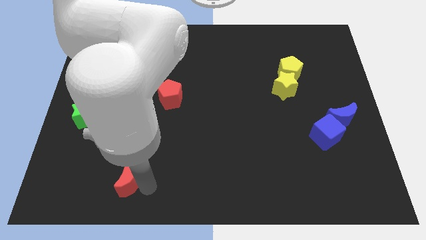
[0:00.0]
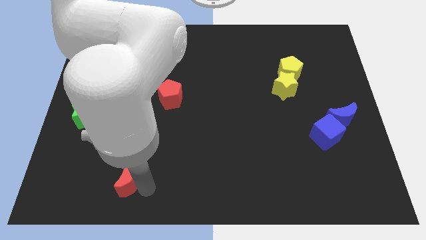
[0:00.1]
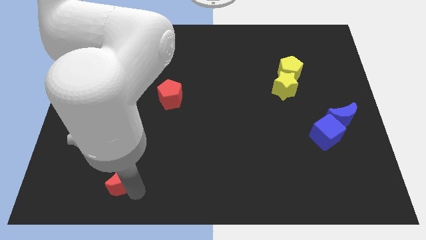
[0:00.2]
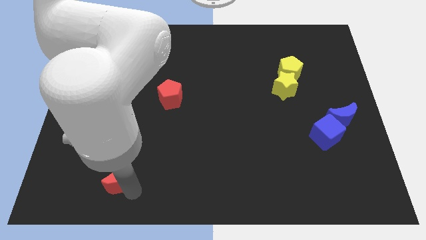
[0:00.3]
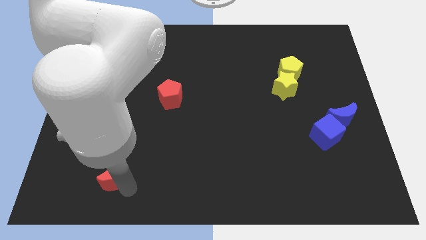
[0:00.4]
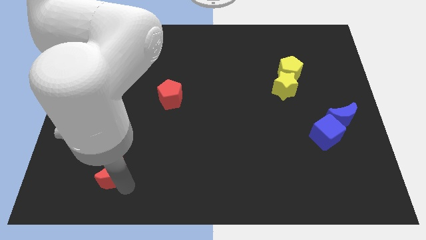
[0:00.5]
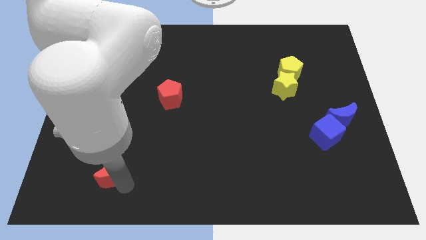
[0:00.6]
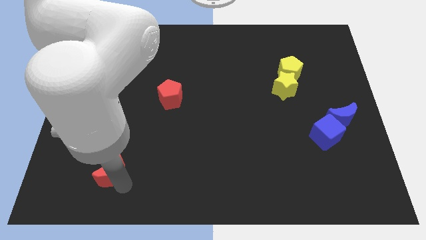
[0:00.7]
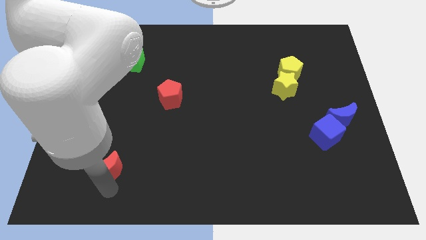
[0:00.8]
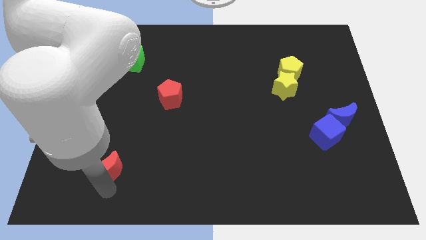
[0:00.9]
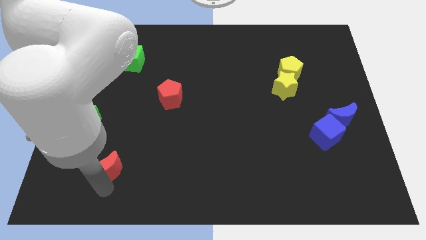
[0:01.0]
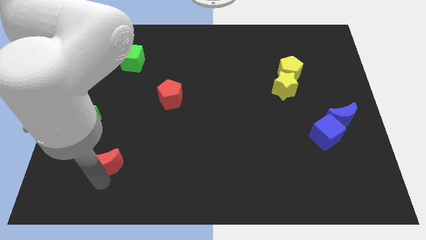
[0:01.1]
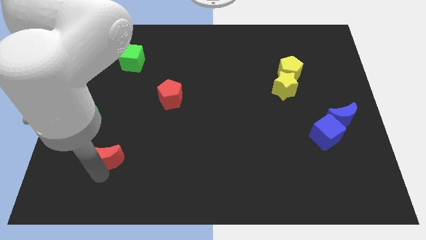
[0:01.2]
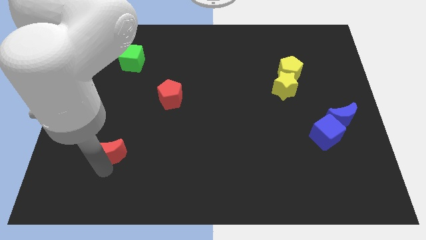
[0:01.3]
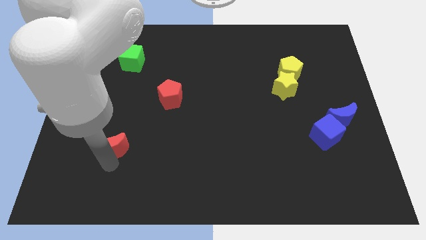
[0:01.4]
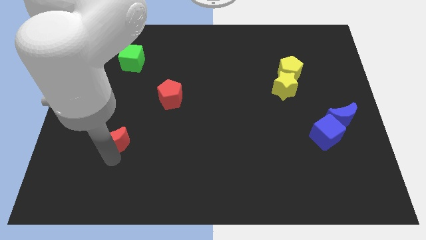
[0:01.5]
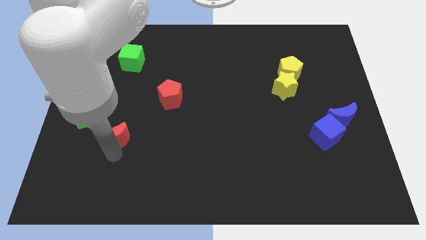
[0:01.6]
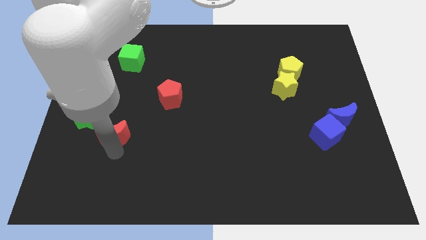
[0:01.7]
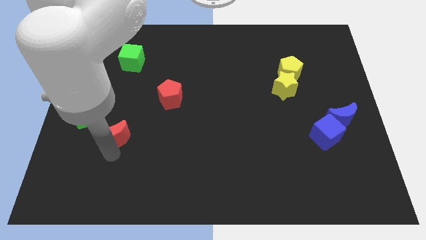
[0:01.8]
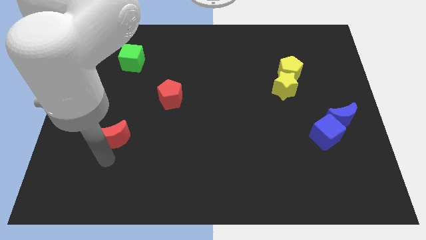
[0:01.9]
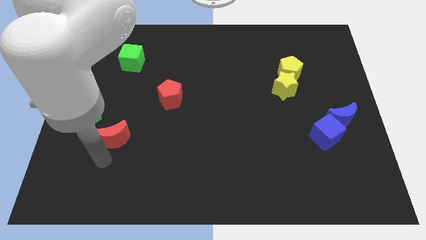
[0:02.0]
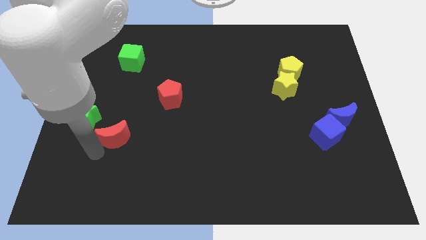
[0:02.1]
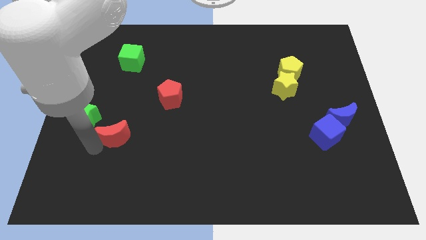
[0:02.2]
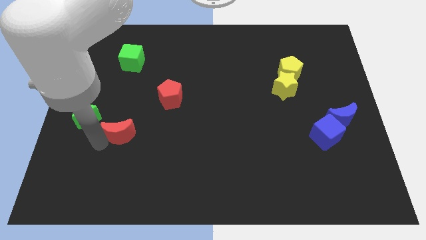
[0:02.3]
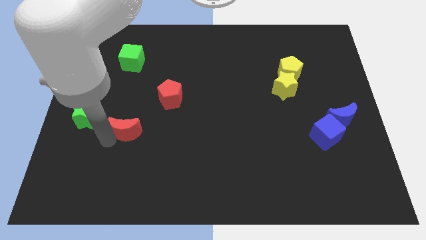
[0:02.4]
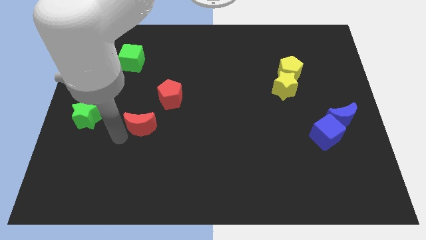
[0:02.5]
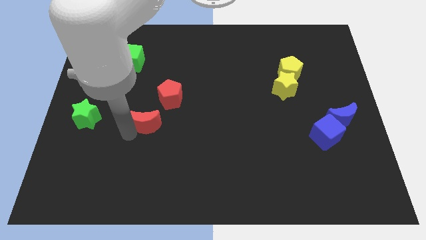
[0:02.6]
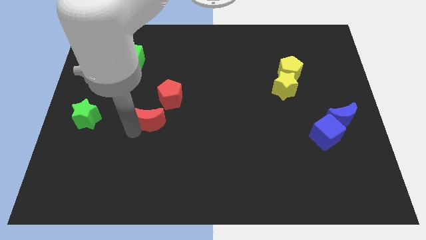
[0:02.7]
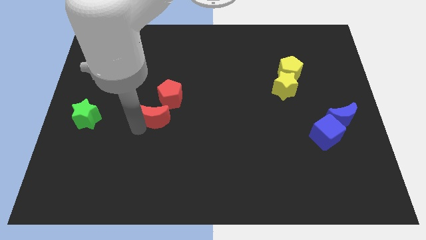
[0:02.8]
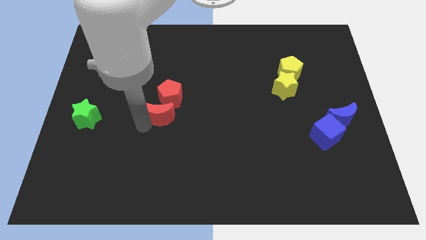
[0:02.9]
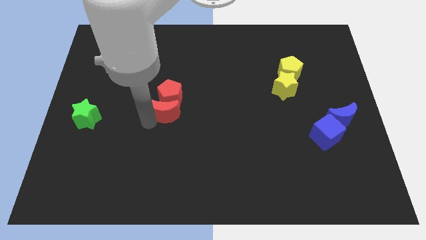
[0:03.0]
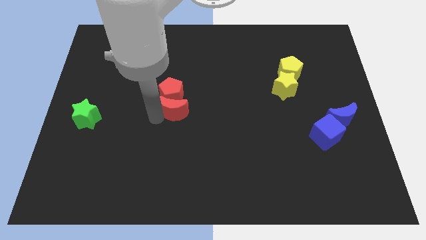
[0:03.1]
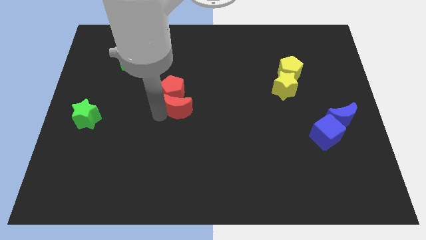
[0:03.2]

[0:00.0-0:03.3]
move the red crescent to the bottom of the red pentagon

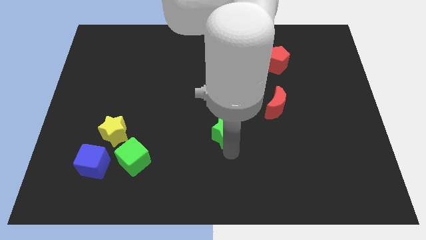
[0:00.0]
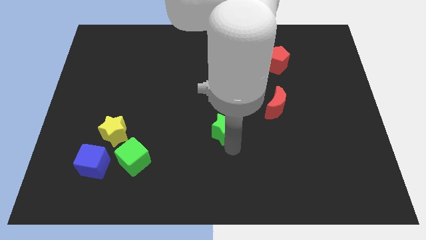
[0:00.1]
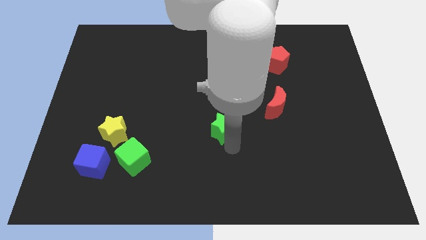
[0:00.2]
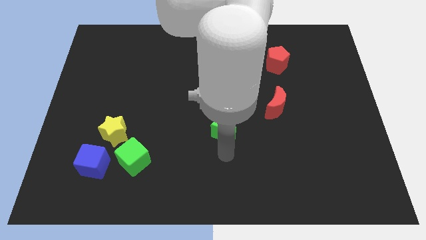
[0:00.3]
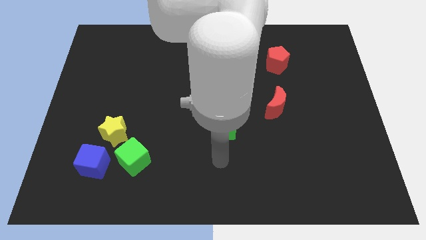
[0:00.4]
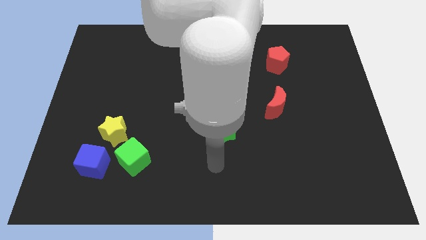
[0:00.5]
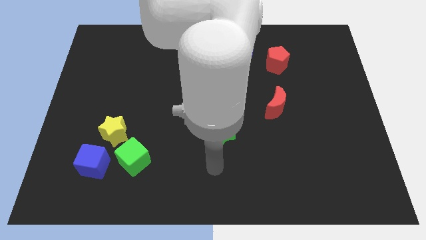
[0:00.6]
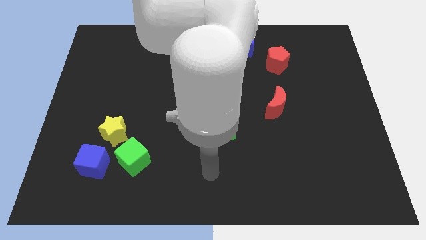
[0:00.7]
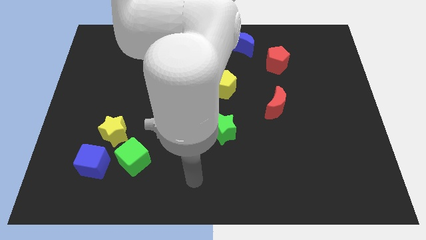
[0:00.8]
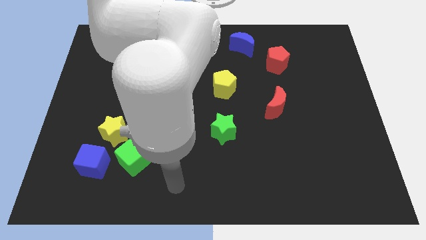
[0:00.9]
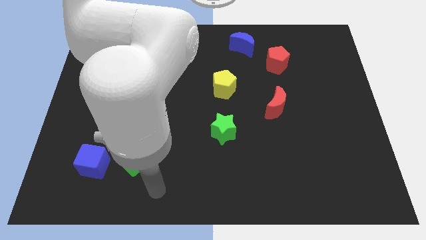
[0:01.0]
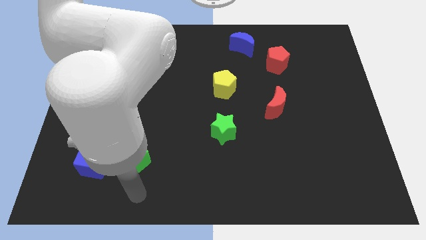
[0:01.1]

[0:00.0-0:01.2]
move the green star below the yellow pentagon

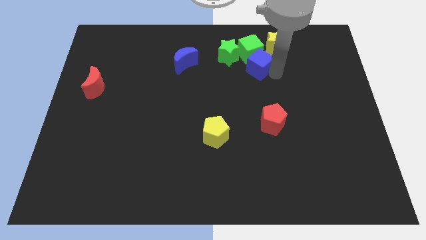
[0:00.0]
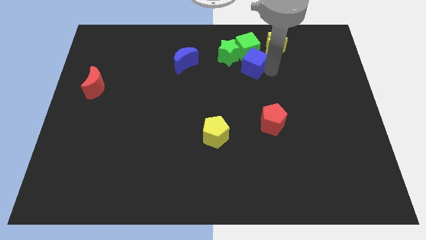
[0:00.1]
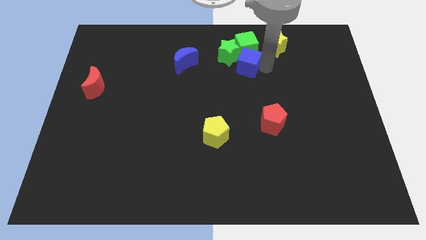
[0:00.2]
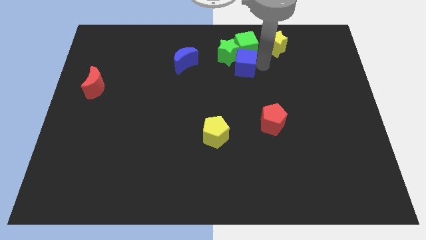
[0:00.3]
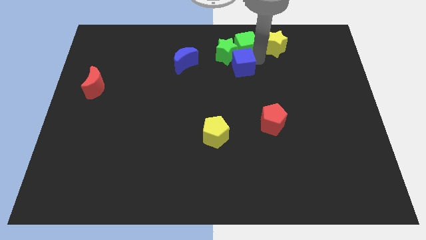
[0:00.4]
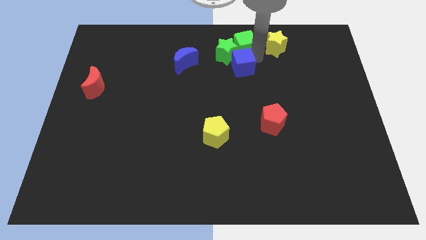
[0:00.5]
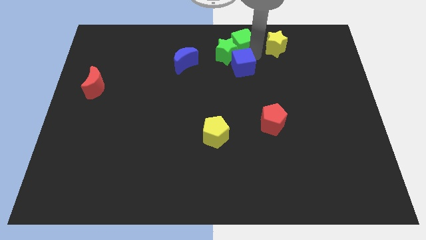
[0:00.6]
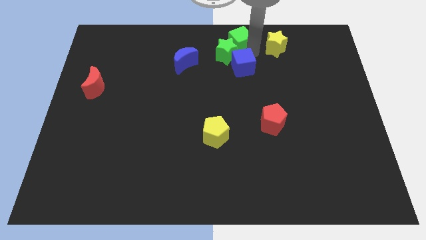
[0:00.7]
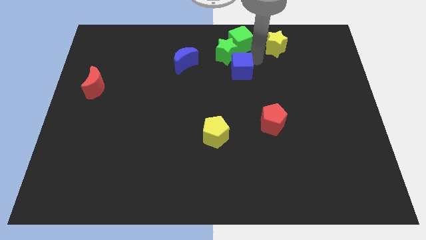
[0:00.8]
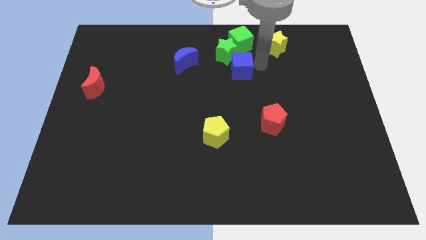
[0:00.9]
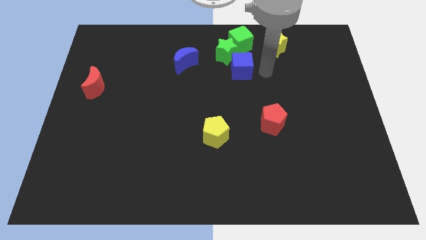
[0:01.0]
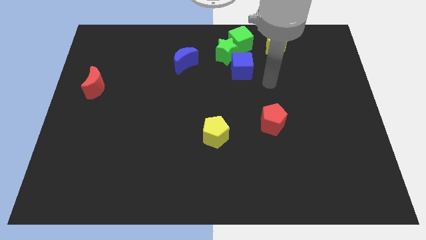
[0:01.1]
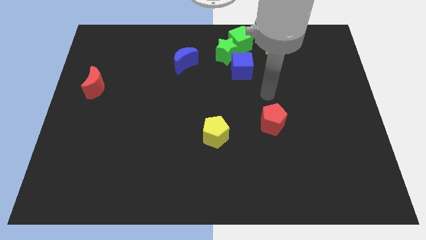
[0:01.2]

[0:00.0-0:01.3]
separate the green cube away from the blue cube

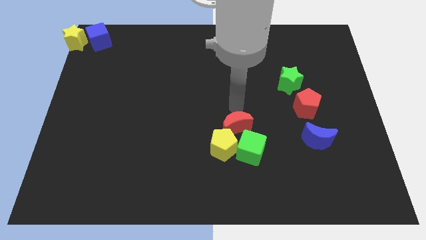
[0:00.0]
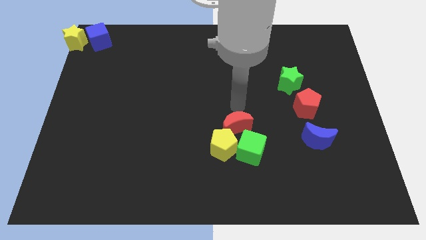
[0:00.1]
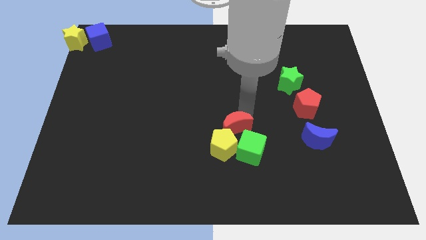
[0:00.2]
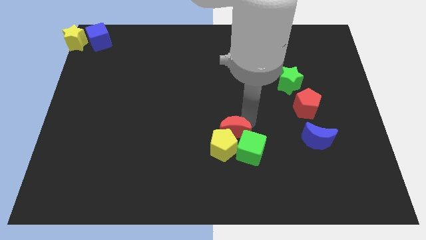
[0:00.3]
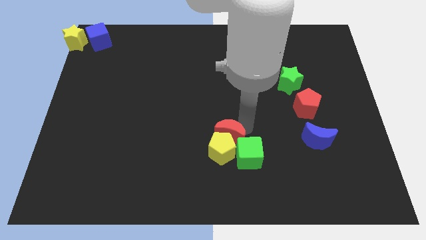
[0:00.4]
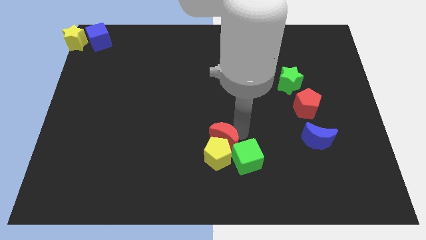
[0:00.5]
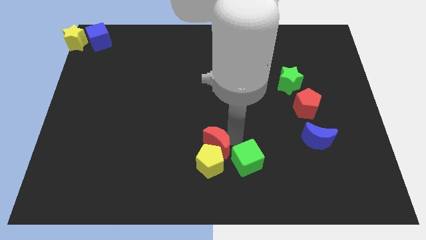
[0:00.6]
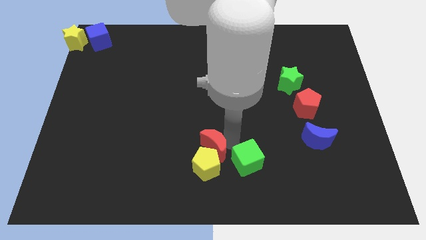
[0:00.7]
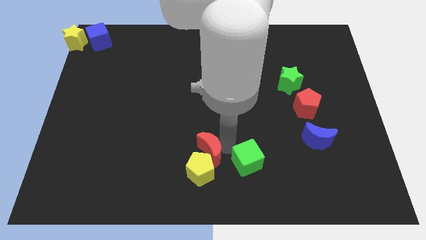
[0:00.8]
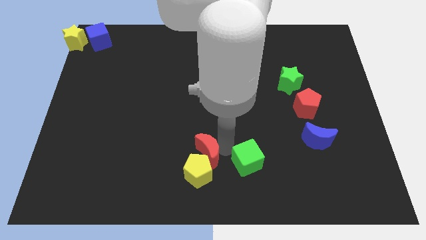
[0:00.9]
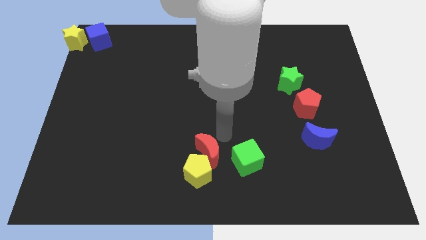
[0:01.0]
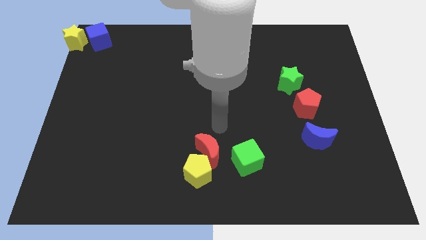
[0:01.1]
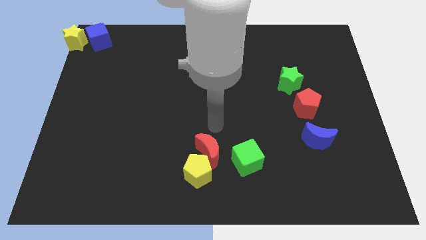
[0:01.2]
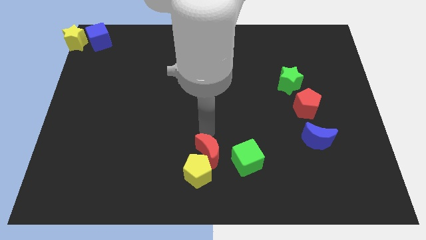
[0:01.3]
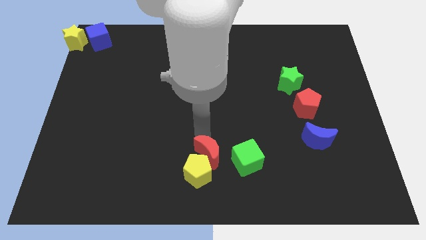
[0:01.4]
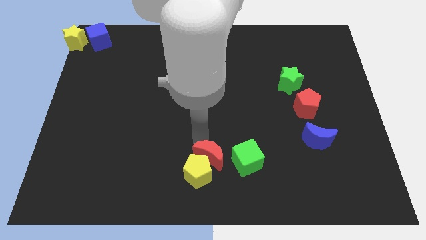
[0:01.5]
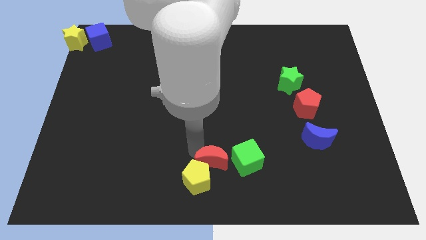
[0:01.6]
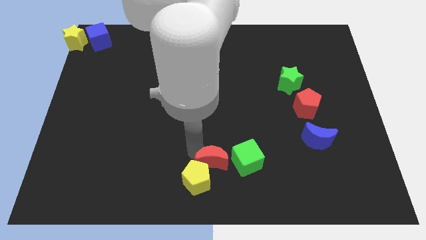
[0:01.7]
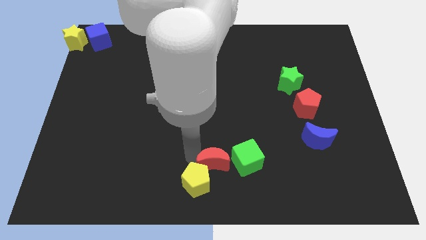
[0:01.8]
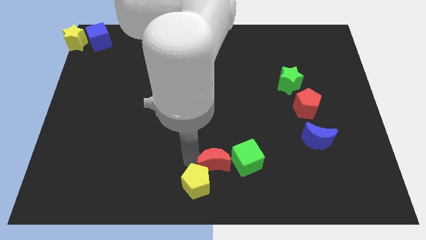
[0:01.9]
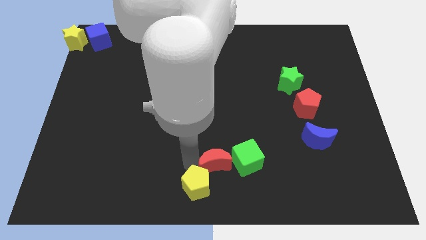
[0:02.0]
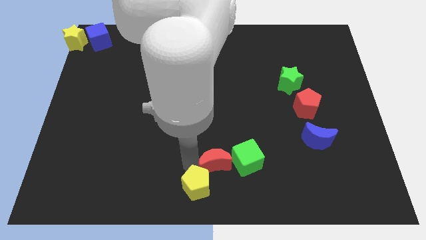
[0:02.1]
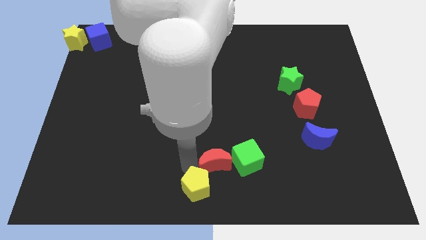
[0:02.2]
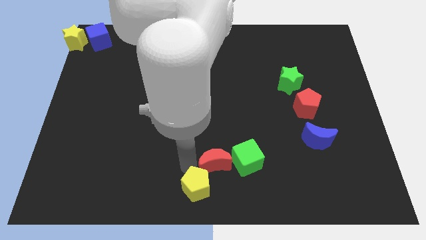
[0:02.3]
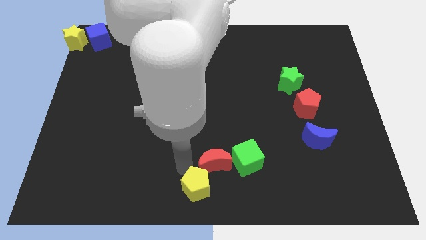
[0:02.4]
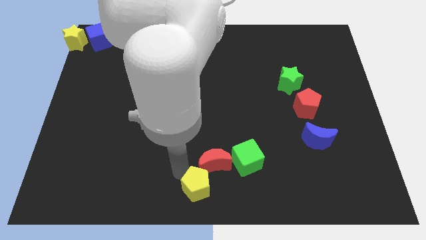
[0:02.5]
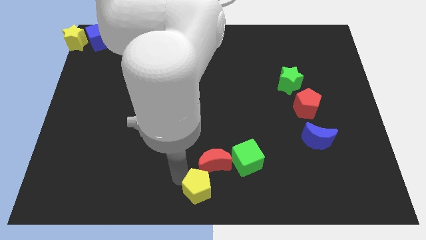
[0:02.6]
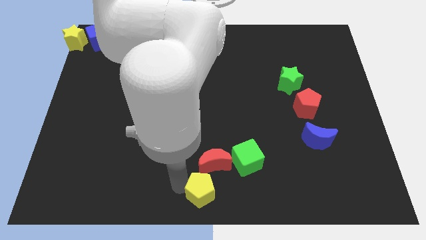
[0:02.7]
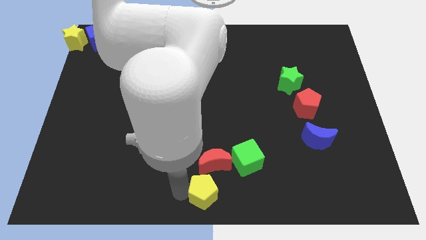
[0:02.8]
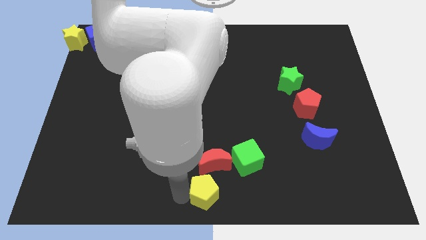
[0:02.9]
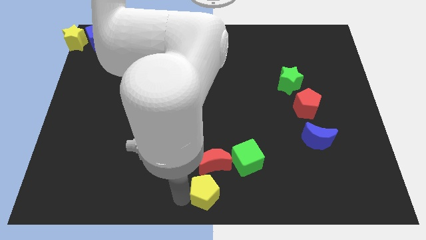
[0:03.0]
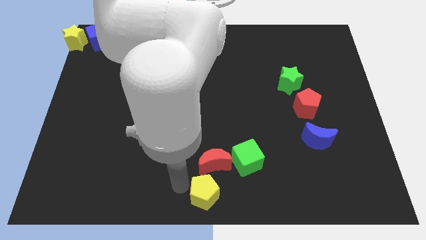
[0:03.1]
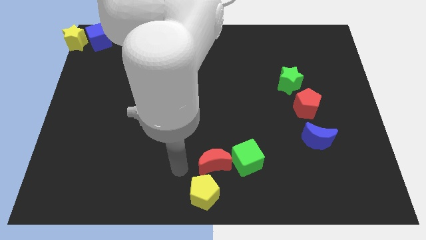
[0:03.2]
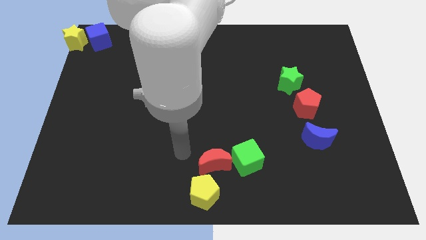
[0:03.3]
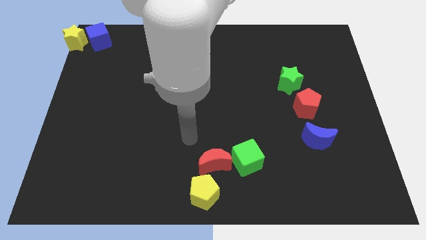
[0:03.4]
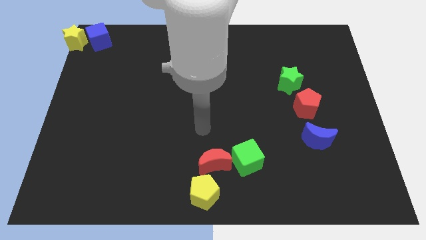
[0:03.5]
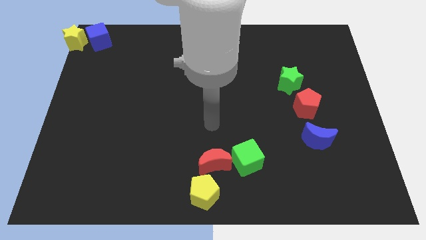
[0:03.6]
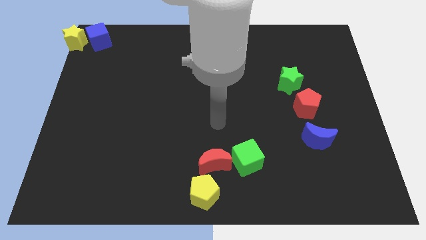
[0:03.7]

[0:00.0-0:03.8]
move the yellow pentagon to the bottom middle
